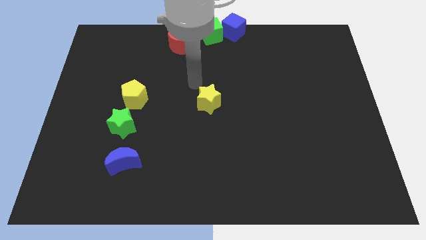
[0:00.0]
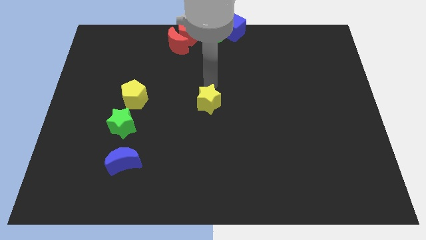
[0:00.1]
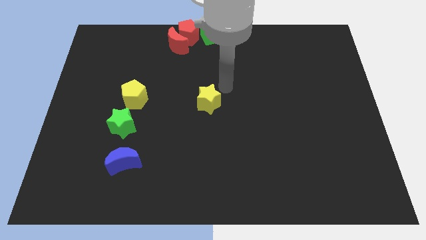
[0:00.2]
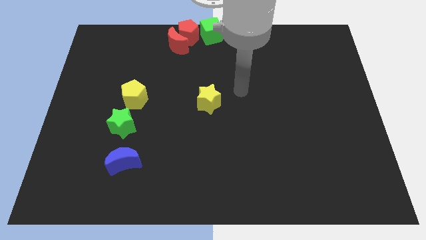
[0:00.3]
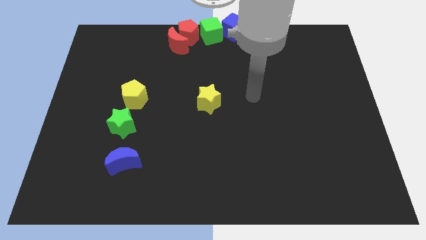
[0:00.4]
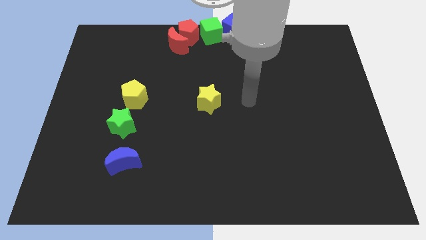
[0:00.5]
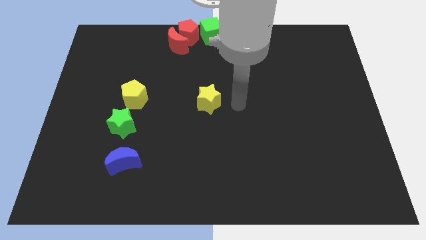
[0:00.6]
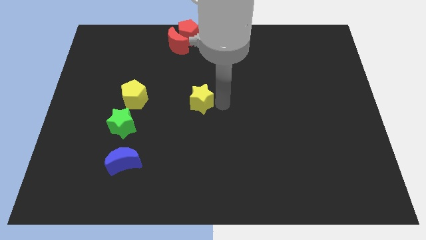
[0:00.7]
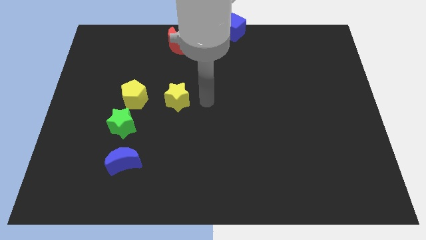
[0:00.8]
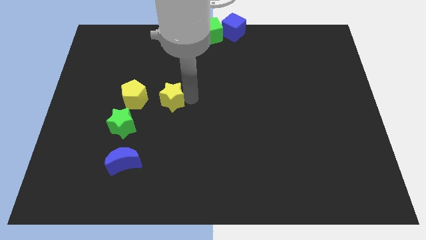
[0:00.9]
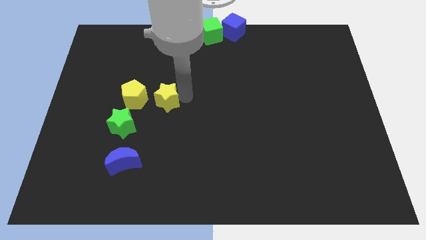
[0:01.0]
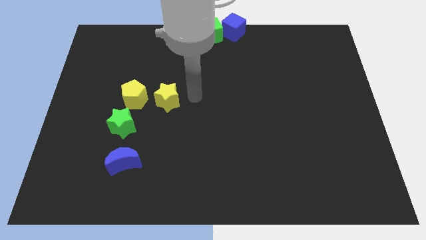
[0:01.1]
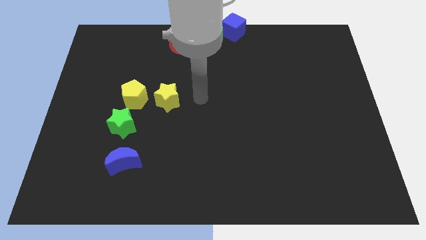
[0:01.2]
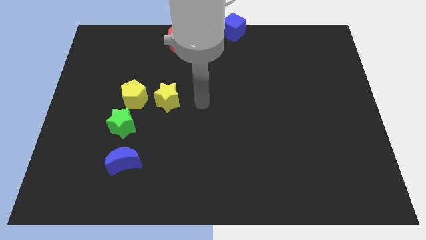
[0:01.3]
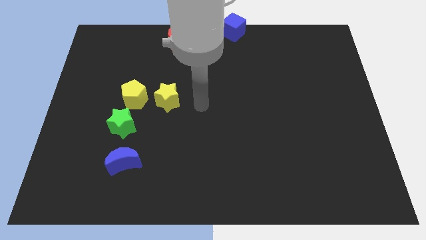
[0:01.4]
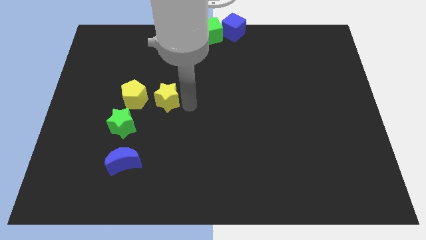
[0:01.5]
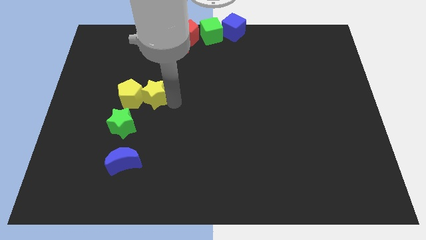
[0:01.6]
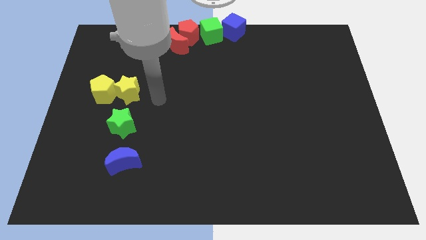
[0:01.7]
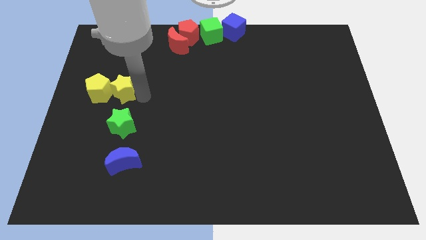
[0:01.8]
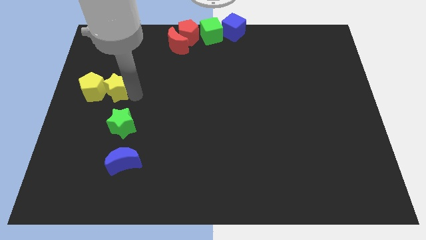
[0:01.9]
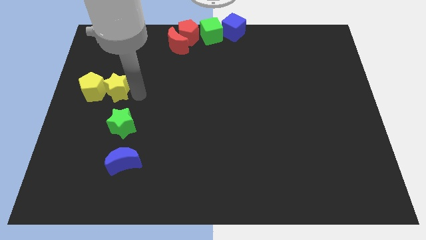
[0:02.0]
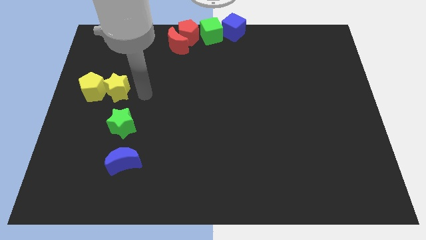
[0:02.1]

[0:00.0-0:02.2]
push yellow star into the yellow pentagon towards left side of the board

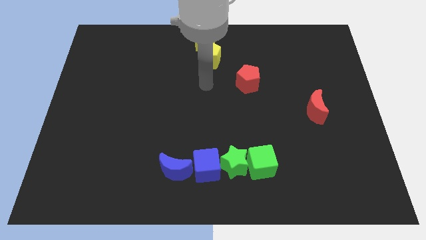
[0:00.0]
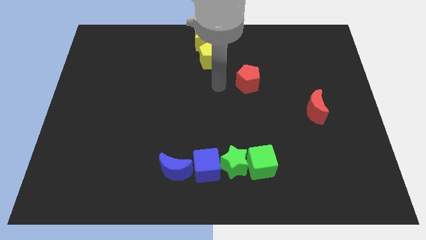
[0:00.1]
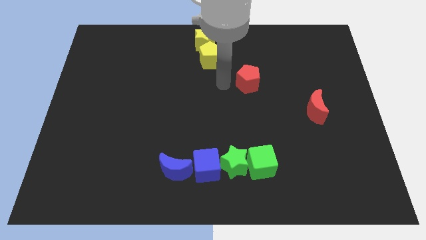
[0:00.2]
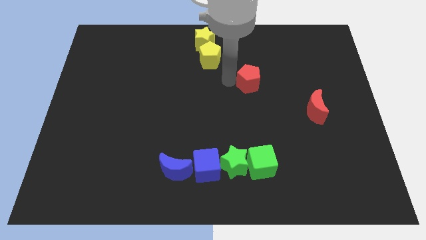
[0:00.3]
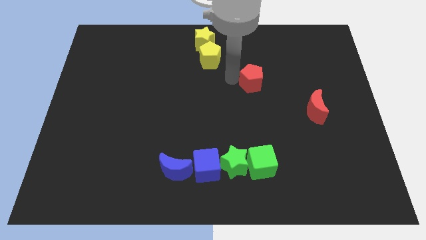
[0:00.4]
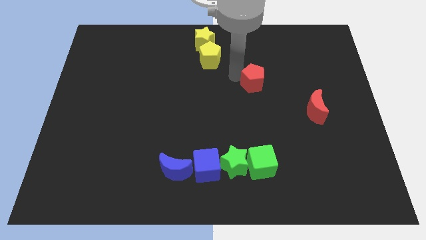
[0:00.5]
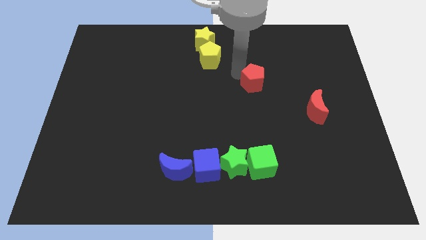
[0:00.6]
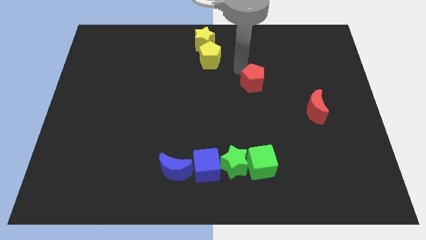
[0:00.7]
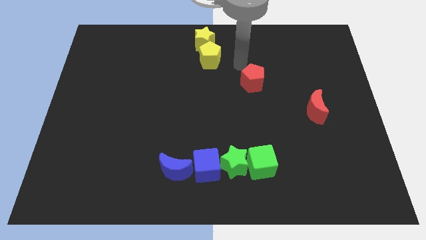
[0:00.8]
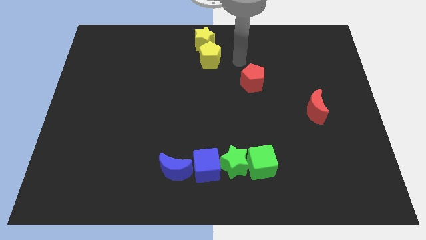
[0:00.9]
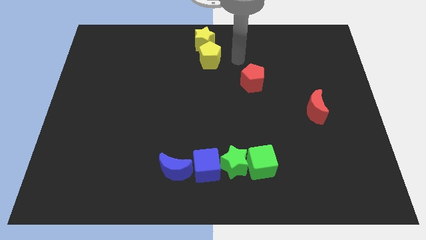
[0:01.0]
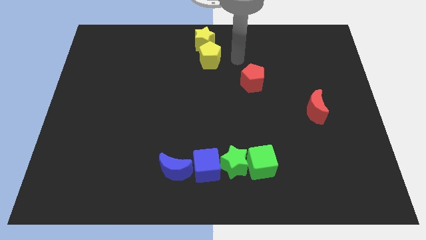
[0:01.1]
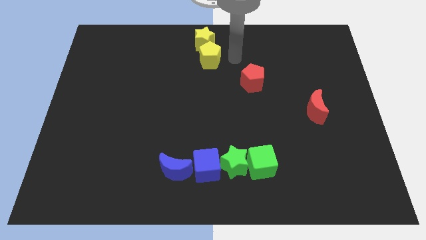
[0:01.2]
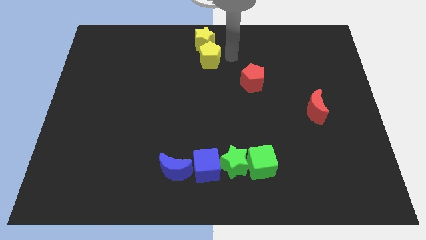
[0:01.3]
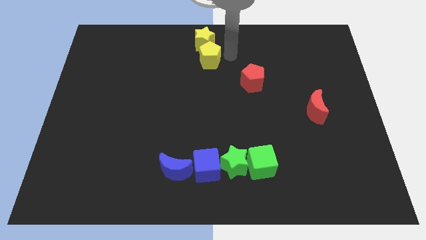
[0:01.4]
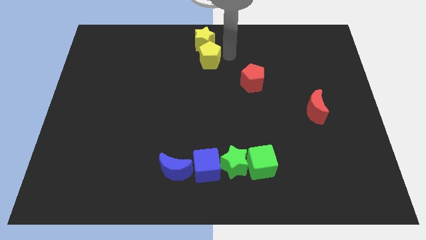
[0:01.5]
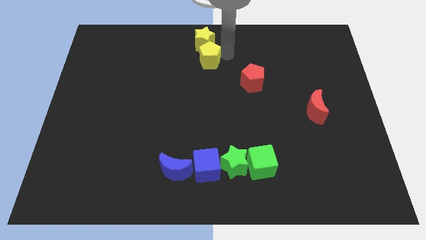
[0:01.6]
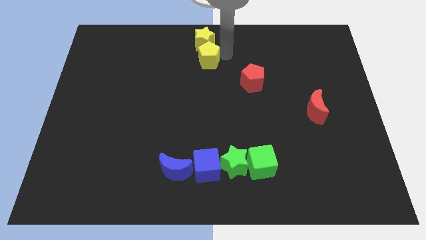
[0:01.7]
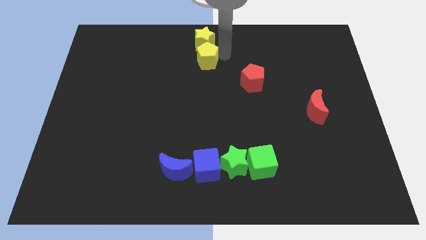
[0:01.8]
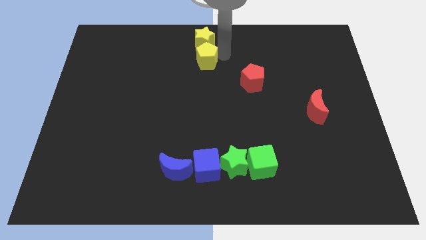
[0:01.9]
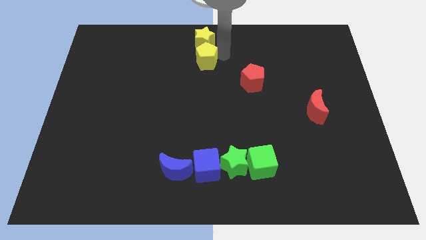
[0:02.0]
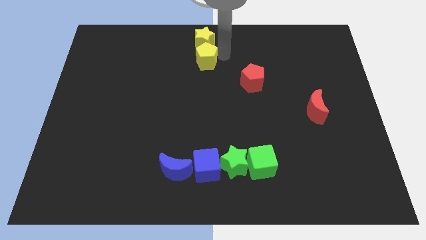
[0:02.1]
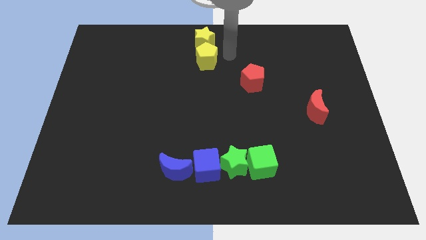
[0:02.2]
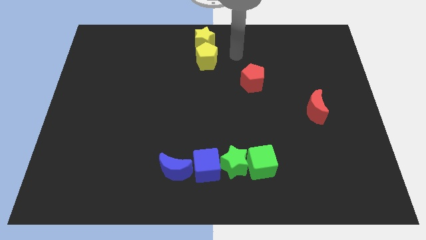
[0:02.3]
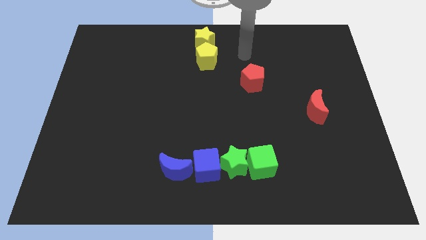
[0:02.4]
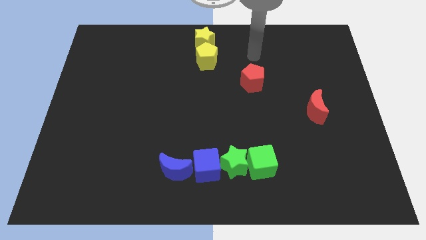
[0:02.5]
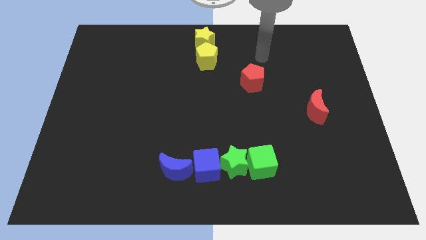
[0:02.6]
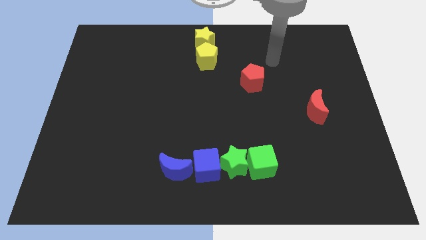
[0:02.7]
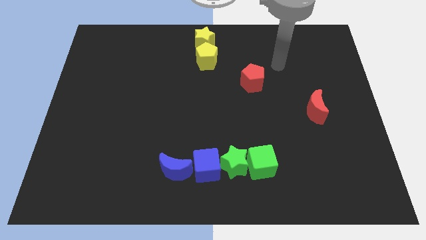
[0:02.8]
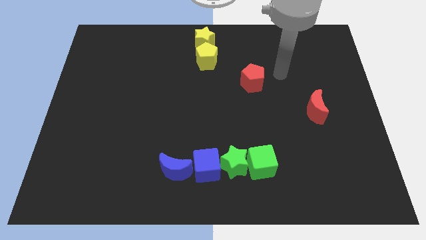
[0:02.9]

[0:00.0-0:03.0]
move the yellow pentagon slightly to the left

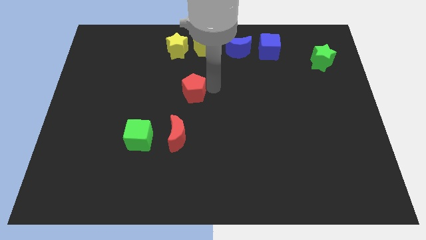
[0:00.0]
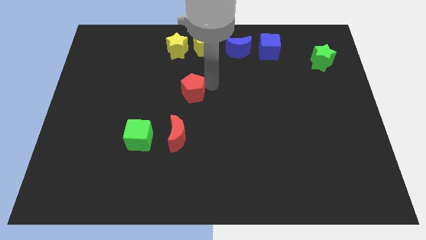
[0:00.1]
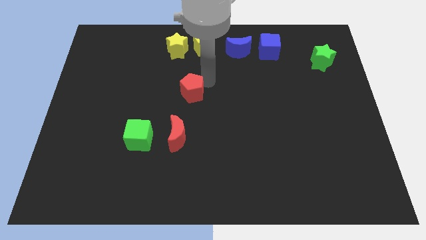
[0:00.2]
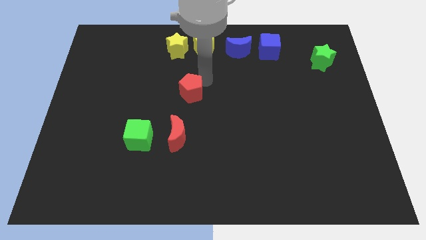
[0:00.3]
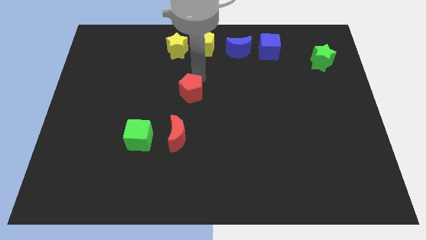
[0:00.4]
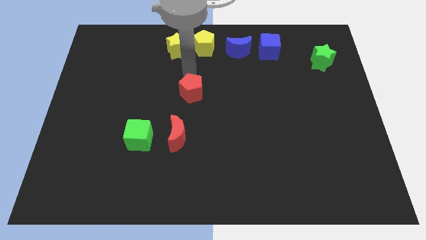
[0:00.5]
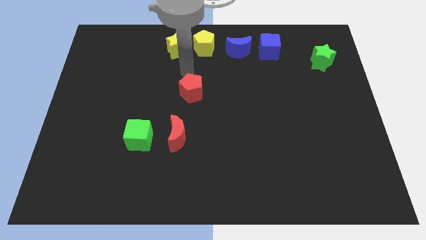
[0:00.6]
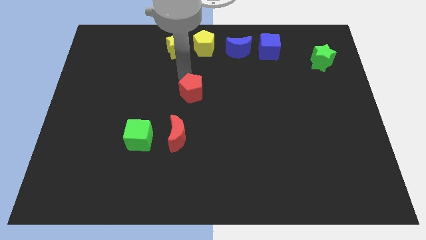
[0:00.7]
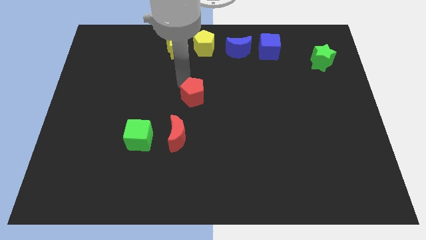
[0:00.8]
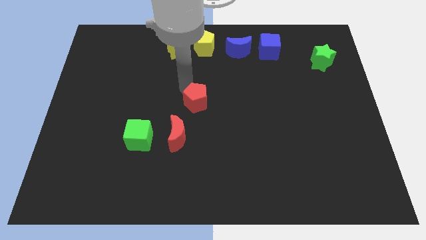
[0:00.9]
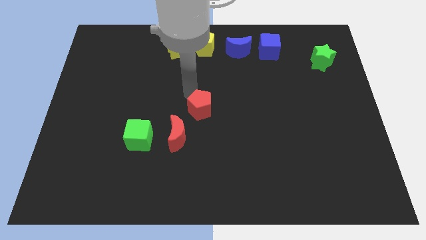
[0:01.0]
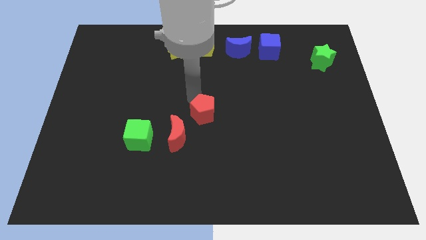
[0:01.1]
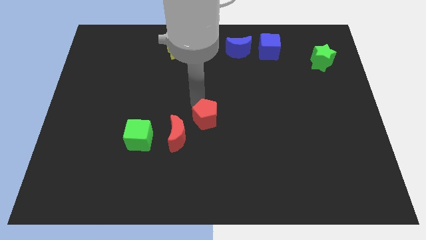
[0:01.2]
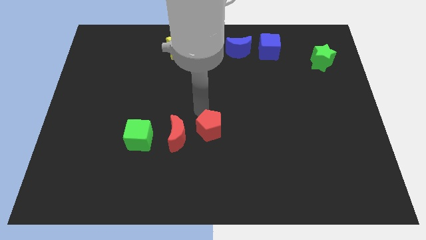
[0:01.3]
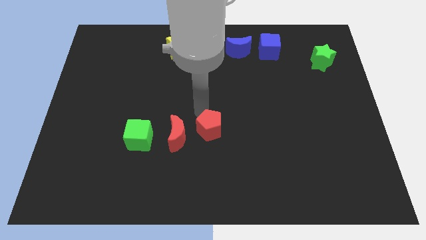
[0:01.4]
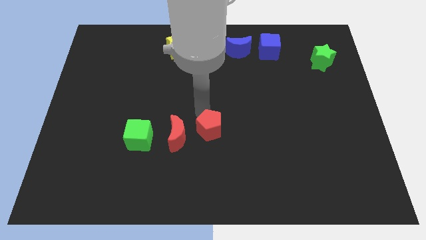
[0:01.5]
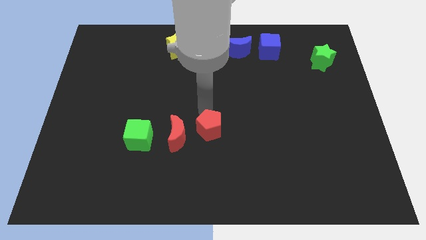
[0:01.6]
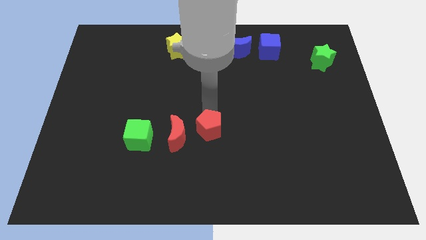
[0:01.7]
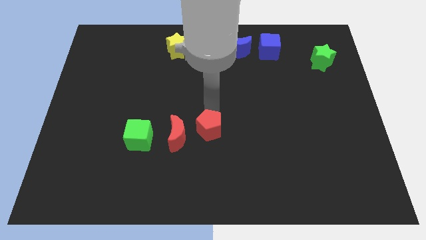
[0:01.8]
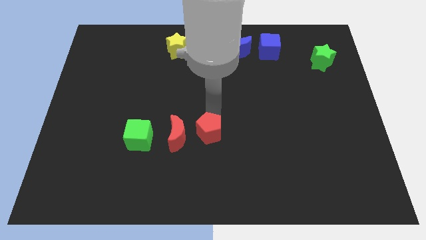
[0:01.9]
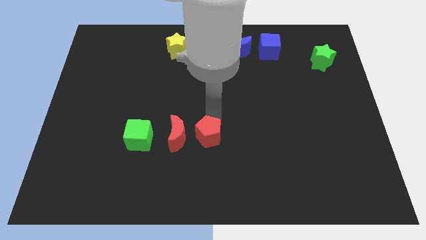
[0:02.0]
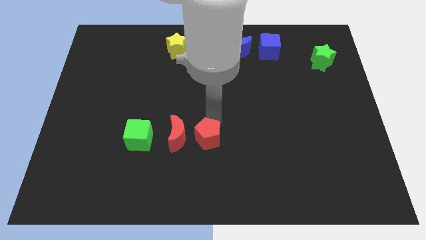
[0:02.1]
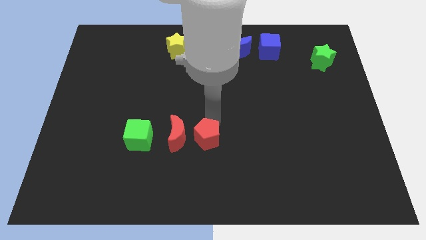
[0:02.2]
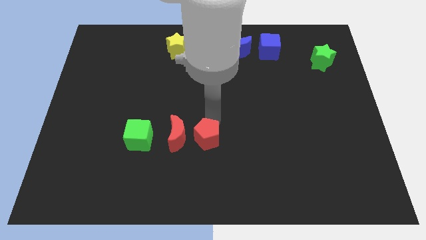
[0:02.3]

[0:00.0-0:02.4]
move the red pentagon right to the red crescent

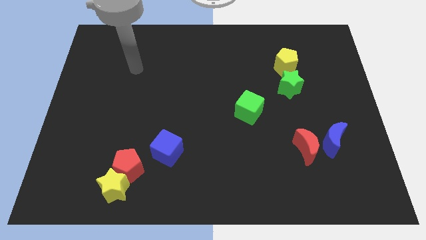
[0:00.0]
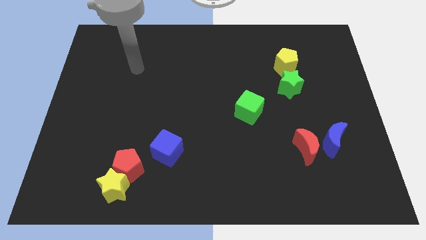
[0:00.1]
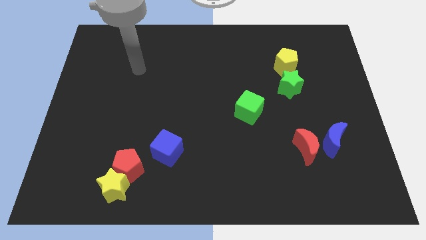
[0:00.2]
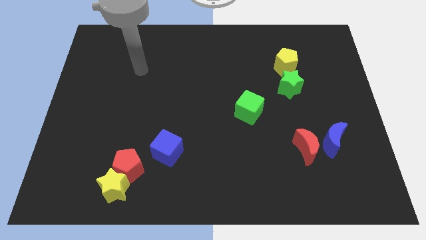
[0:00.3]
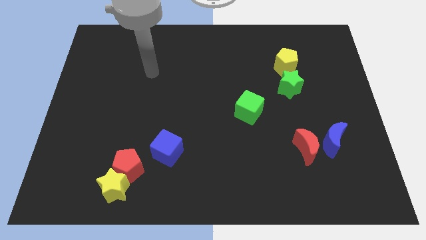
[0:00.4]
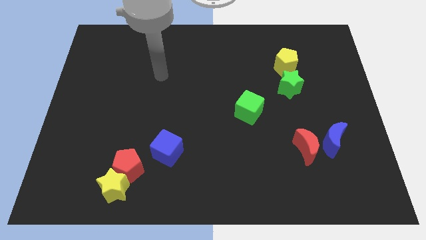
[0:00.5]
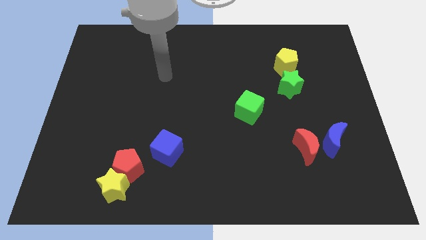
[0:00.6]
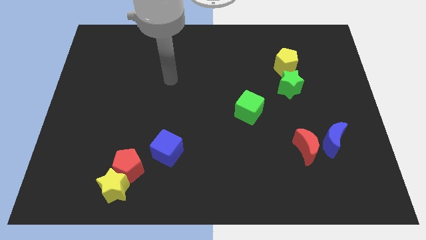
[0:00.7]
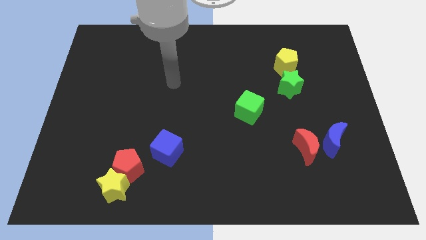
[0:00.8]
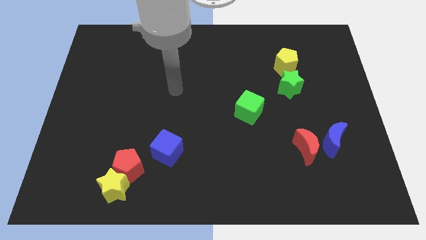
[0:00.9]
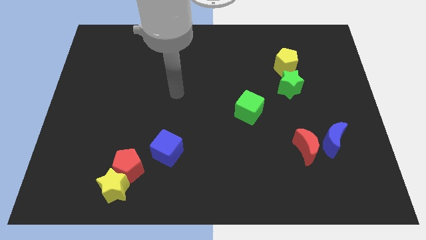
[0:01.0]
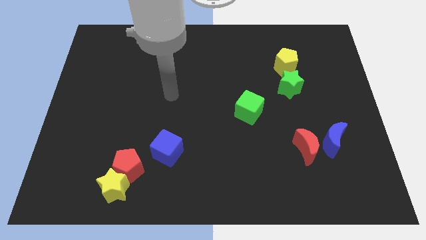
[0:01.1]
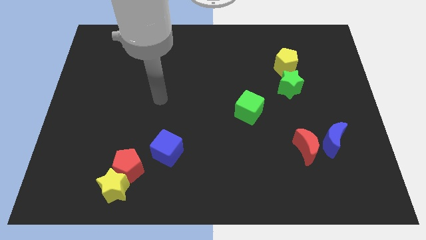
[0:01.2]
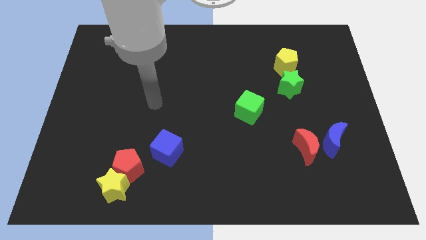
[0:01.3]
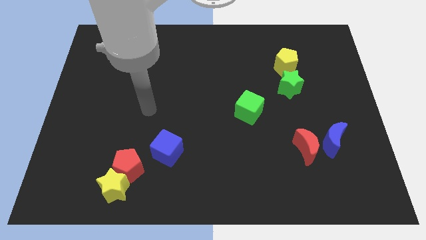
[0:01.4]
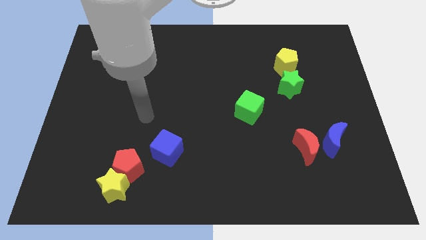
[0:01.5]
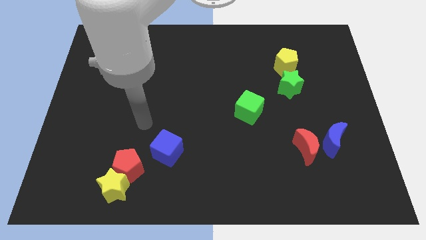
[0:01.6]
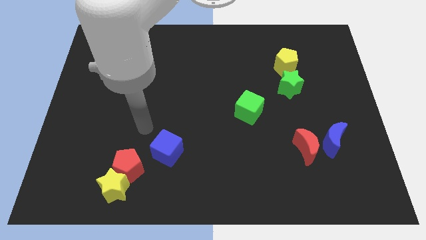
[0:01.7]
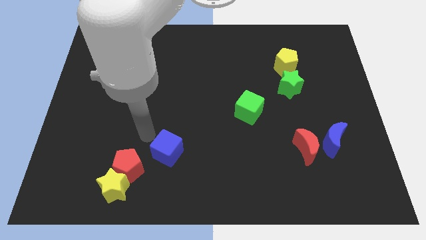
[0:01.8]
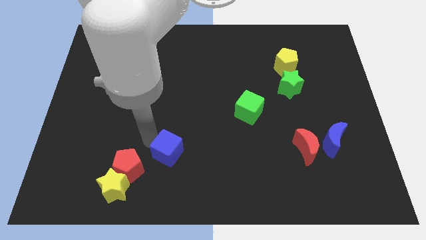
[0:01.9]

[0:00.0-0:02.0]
move the arm towards the blue cube
